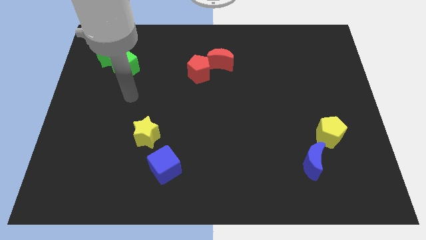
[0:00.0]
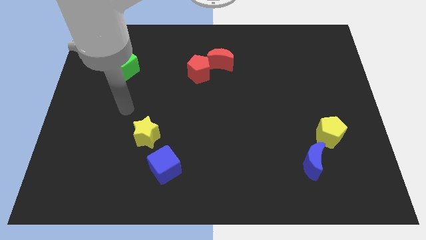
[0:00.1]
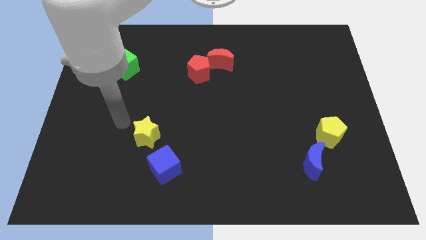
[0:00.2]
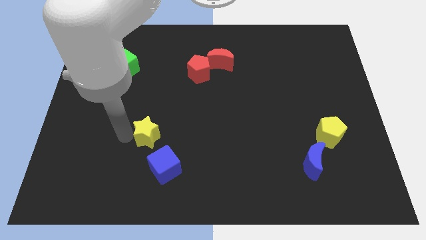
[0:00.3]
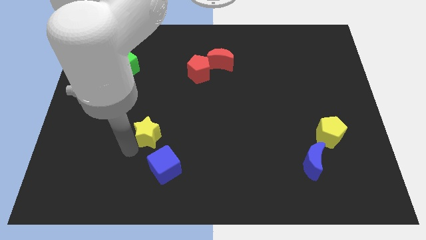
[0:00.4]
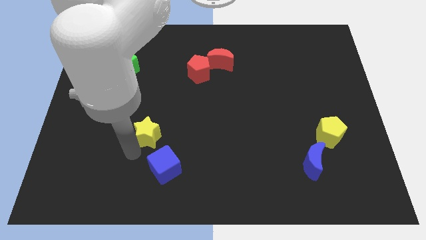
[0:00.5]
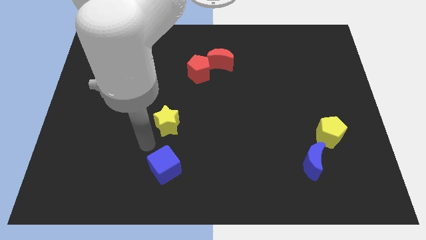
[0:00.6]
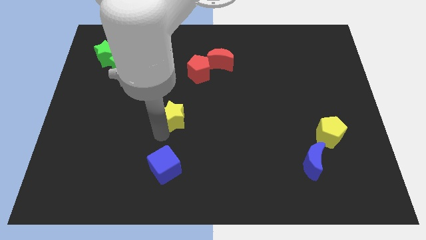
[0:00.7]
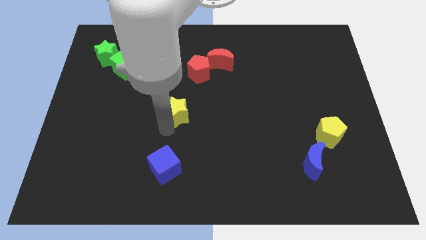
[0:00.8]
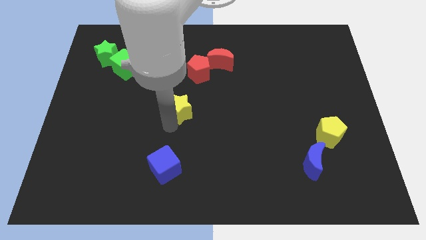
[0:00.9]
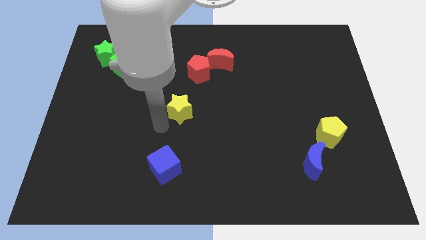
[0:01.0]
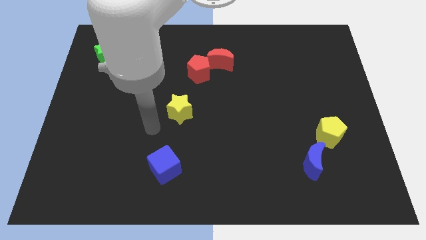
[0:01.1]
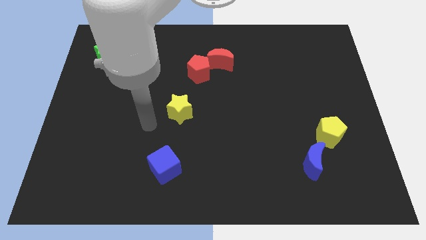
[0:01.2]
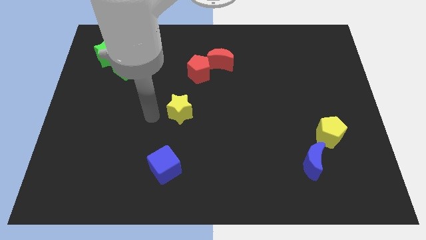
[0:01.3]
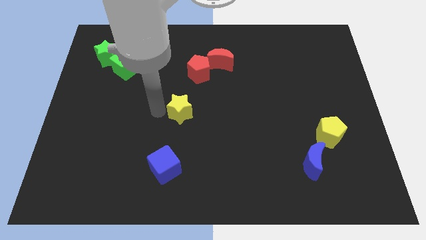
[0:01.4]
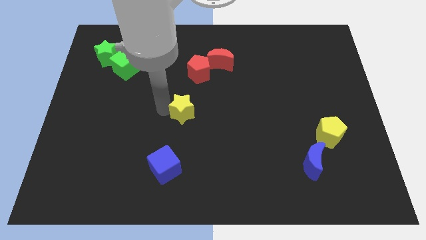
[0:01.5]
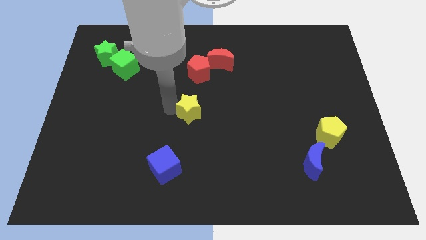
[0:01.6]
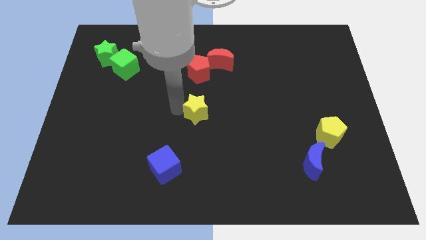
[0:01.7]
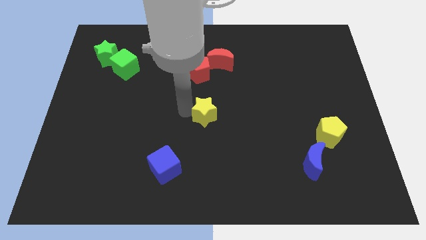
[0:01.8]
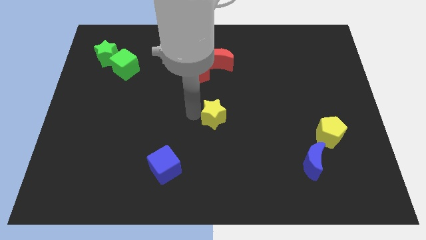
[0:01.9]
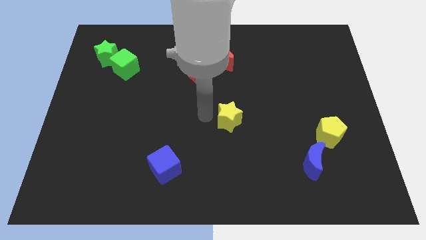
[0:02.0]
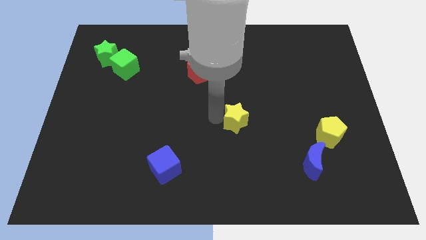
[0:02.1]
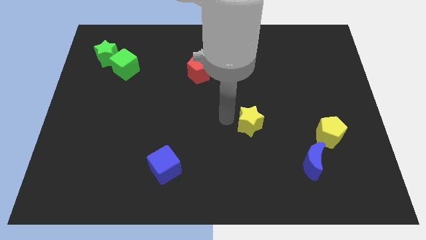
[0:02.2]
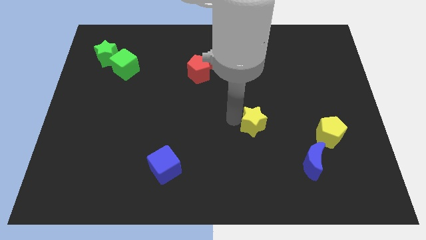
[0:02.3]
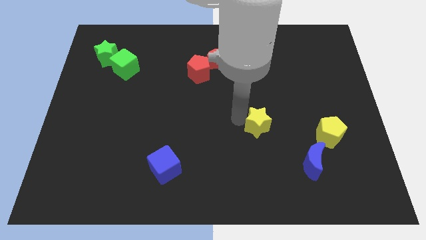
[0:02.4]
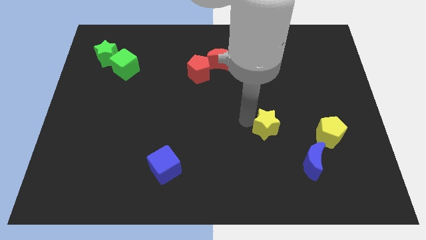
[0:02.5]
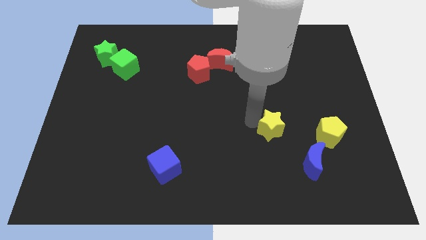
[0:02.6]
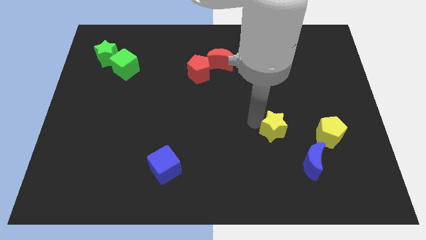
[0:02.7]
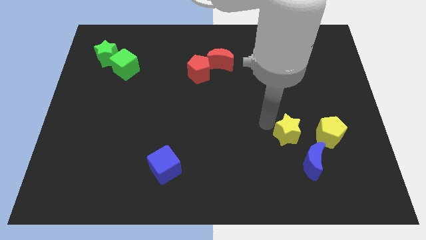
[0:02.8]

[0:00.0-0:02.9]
push the yellow star to the left side of the board

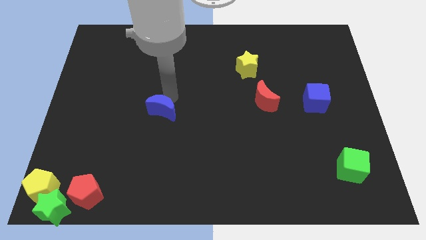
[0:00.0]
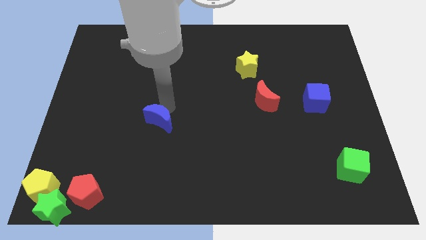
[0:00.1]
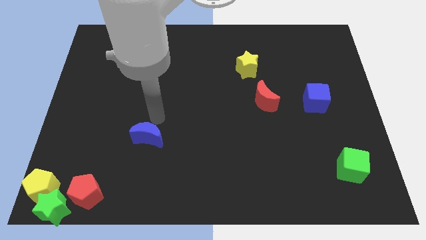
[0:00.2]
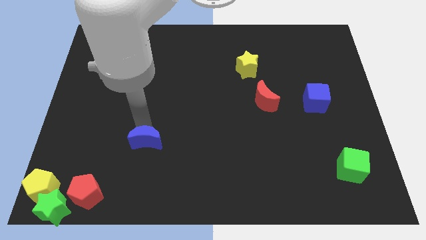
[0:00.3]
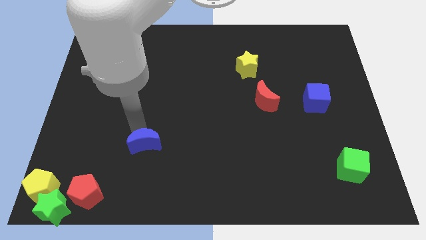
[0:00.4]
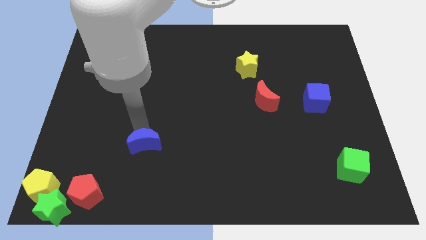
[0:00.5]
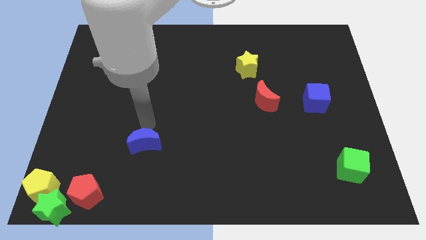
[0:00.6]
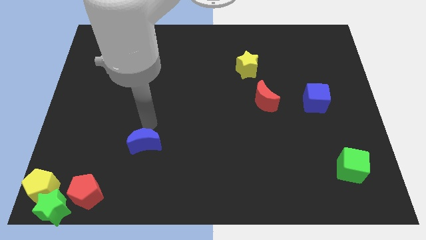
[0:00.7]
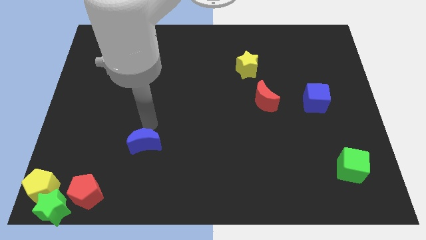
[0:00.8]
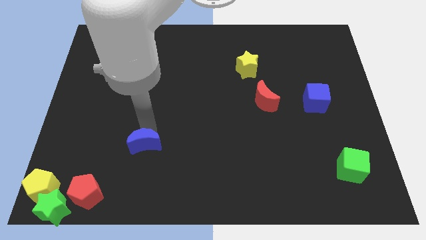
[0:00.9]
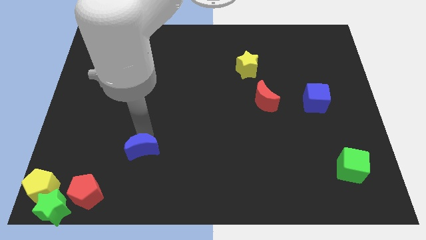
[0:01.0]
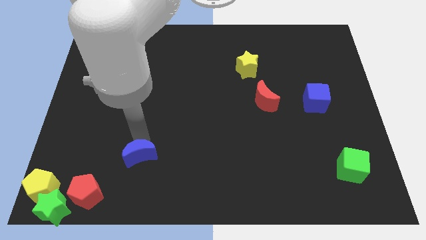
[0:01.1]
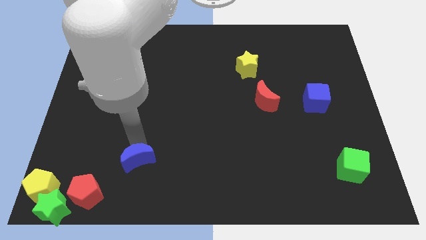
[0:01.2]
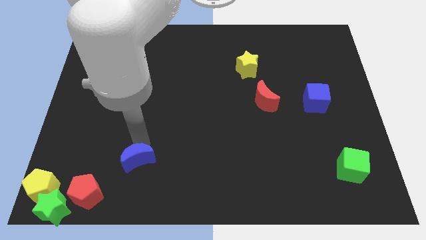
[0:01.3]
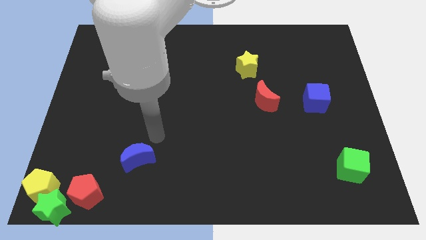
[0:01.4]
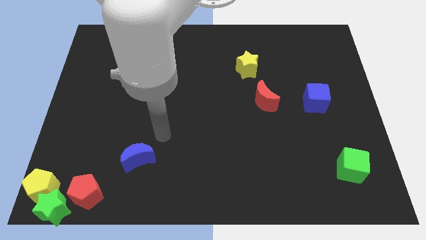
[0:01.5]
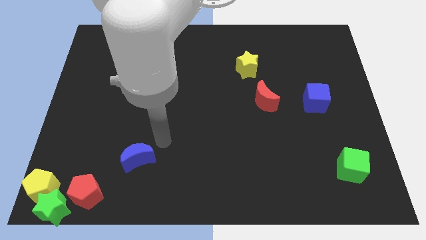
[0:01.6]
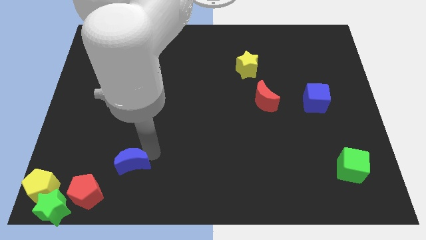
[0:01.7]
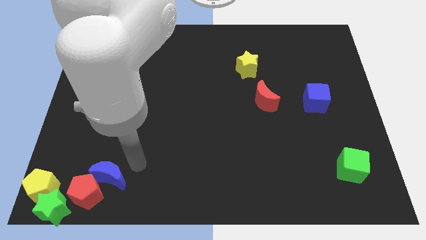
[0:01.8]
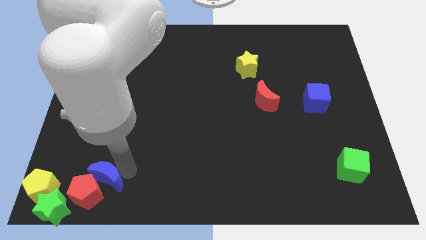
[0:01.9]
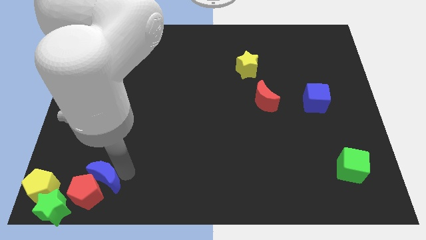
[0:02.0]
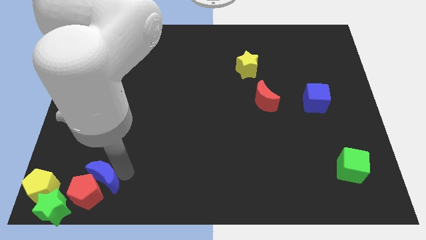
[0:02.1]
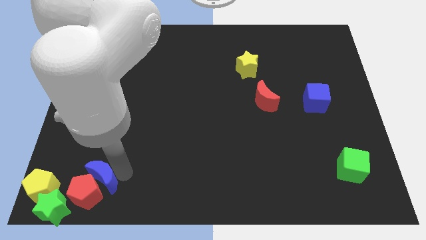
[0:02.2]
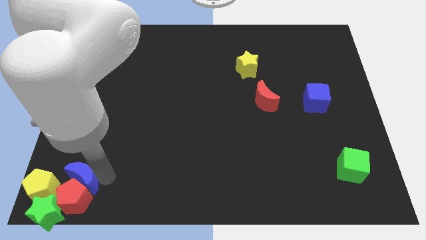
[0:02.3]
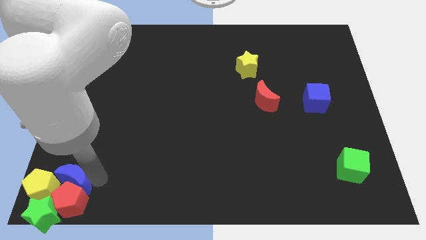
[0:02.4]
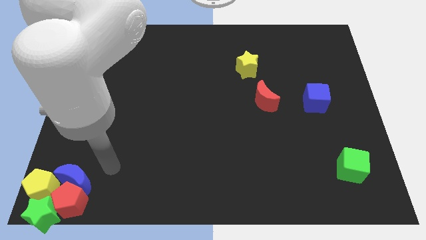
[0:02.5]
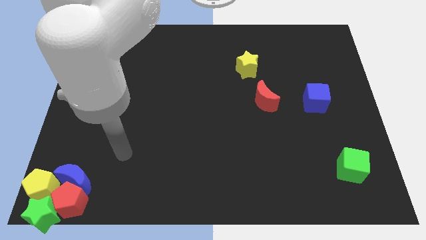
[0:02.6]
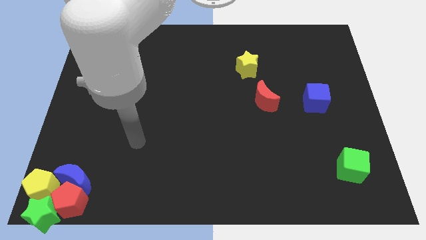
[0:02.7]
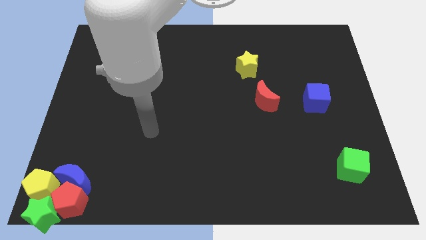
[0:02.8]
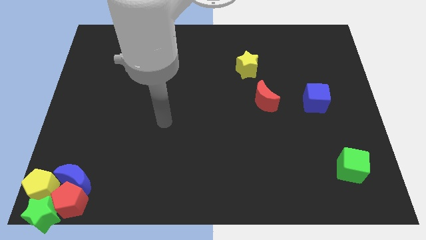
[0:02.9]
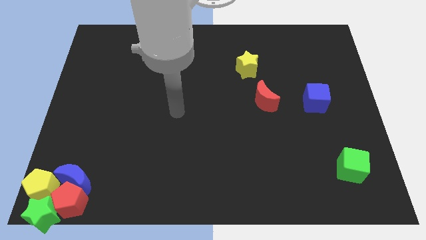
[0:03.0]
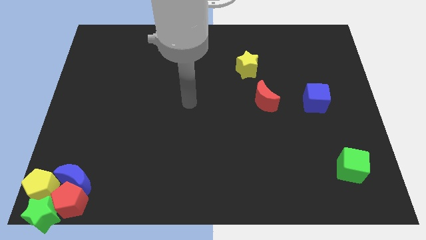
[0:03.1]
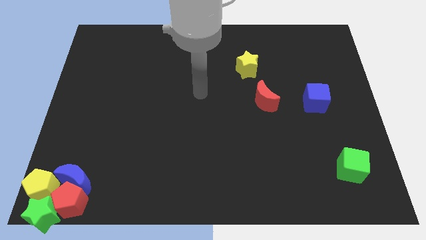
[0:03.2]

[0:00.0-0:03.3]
push the blue moon into group of objects

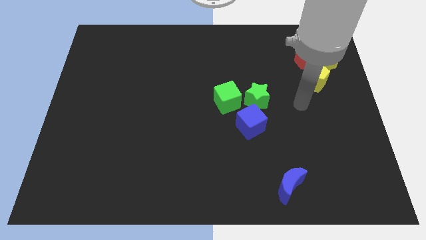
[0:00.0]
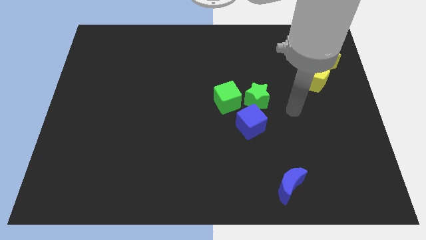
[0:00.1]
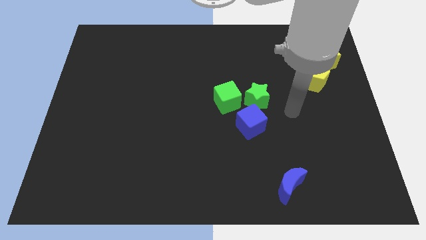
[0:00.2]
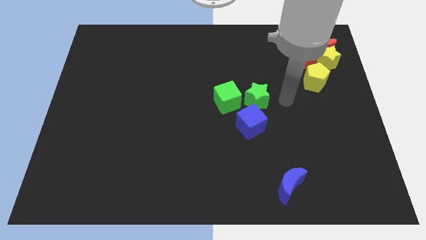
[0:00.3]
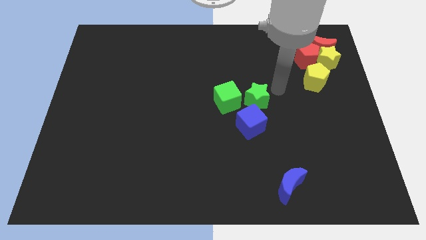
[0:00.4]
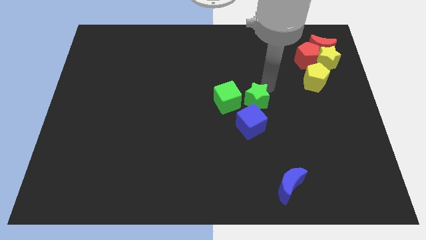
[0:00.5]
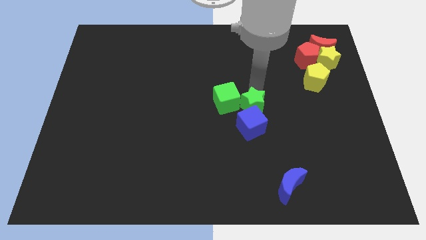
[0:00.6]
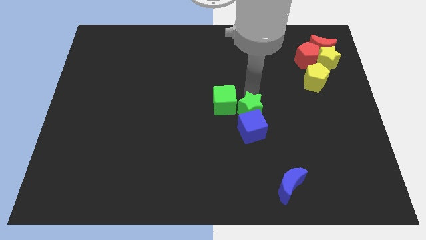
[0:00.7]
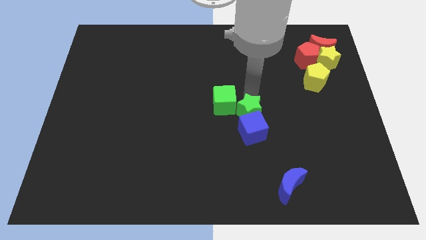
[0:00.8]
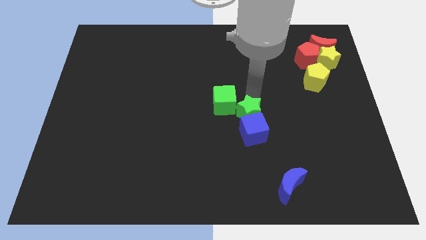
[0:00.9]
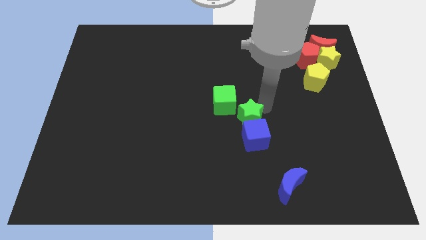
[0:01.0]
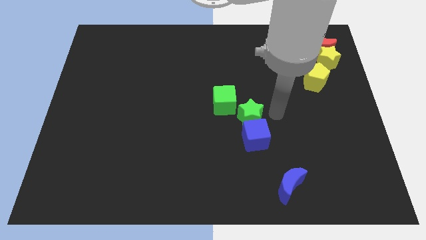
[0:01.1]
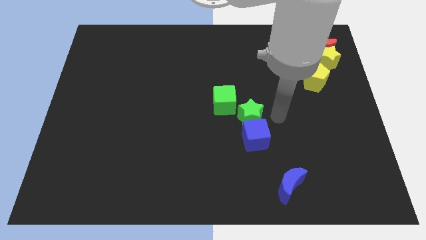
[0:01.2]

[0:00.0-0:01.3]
push the green star into the blue cube

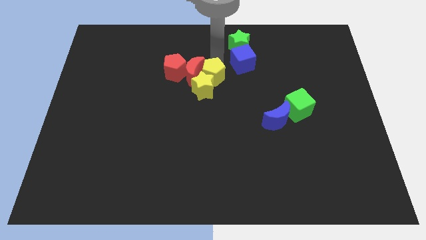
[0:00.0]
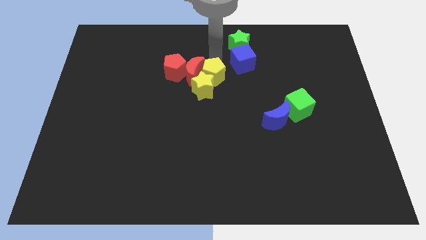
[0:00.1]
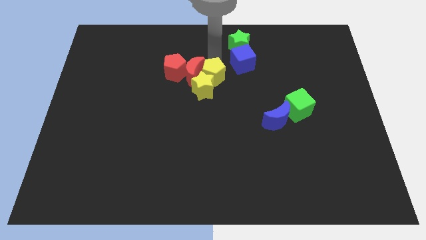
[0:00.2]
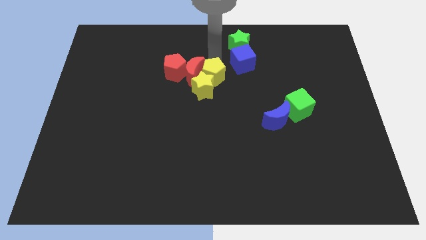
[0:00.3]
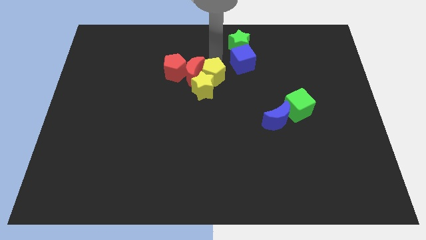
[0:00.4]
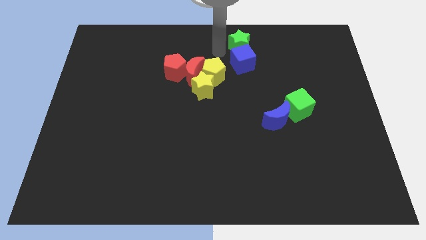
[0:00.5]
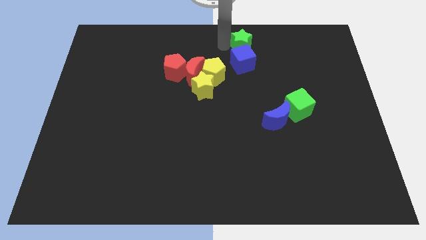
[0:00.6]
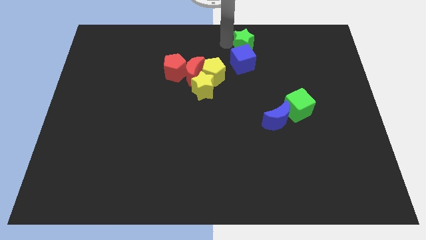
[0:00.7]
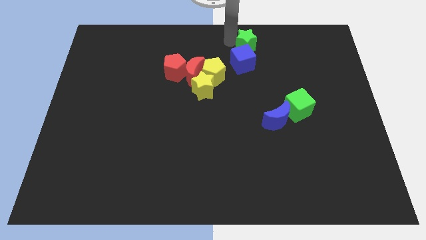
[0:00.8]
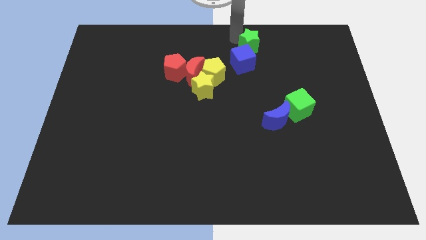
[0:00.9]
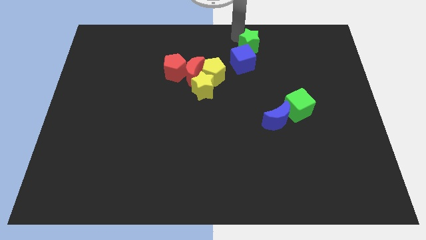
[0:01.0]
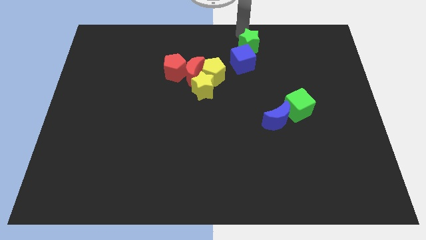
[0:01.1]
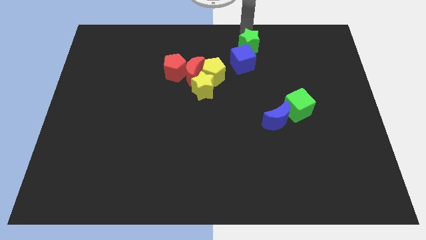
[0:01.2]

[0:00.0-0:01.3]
push the green star slightly towards the right of the board
